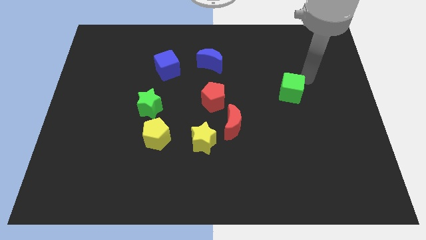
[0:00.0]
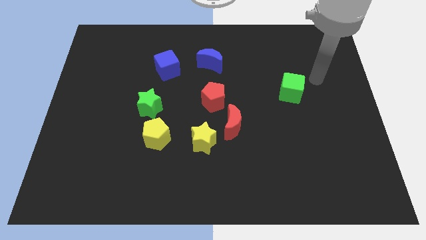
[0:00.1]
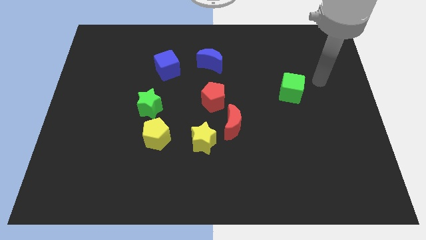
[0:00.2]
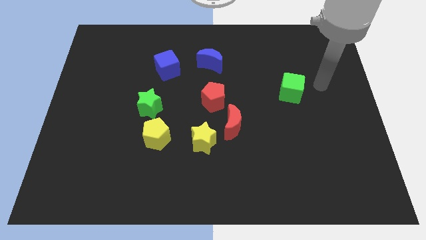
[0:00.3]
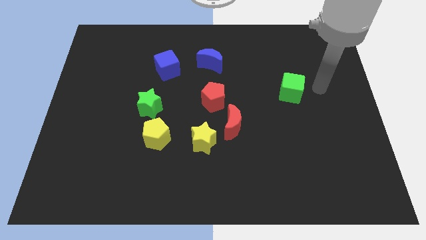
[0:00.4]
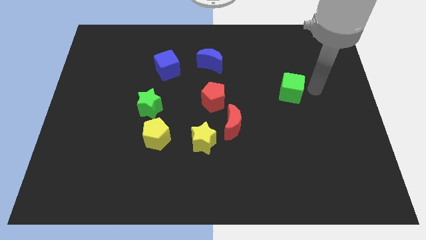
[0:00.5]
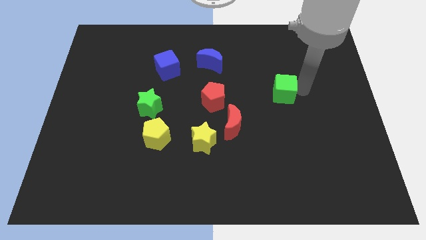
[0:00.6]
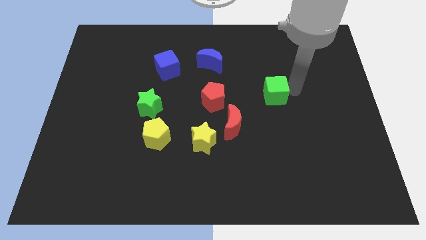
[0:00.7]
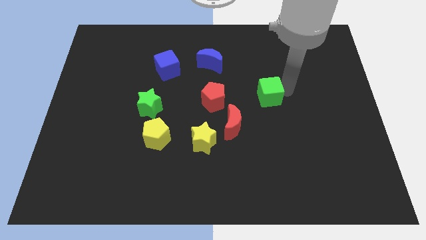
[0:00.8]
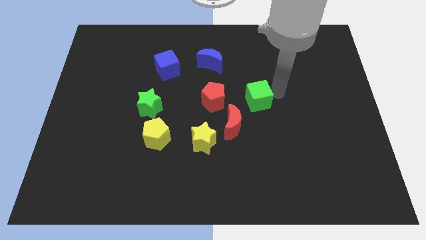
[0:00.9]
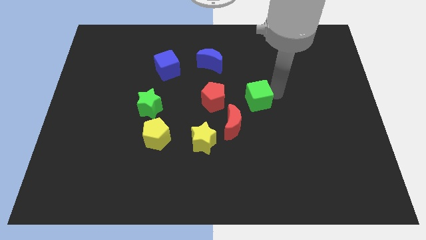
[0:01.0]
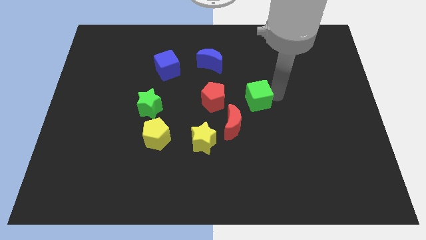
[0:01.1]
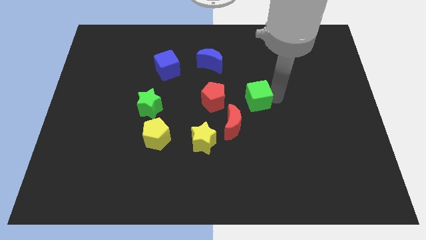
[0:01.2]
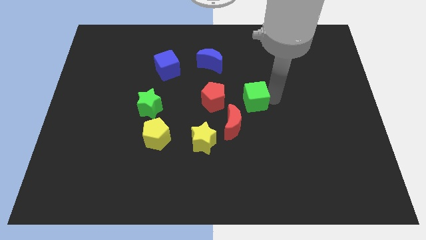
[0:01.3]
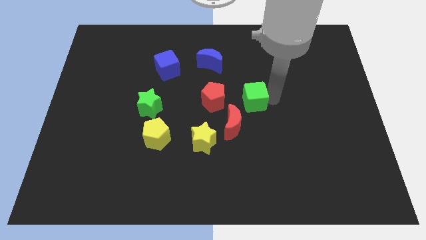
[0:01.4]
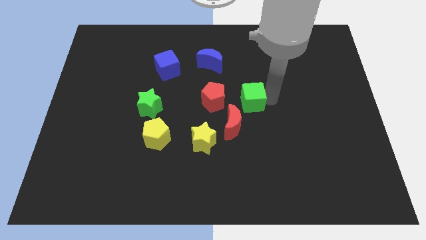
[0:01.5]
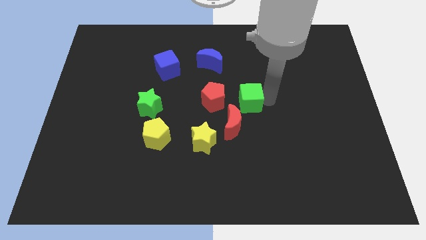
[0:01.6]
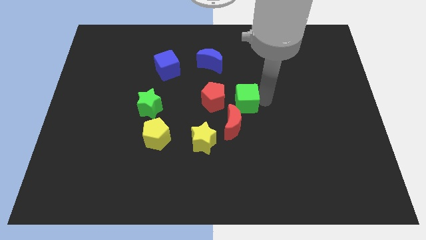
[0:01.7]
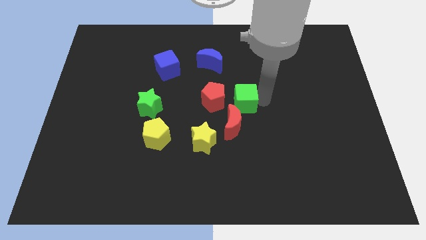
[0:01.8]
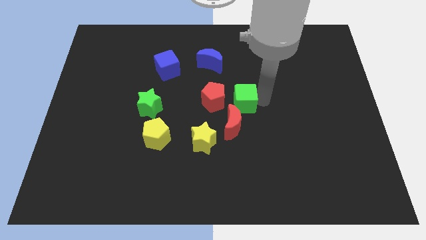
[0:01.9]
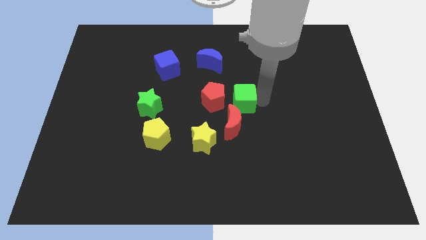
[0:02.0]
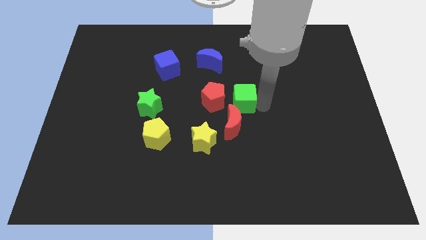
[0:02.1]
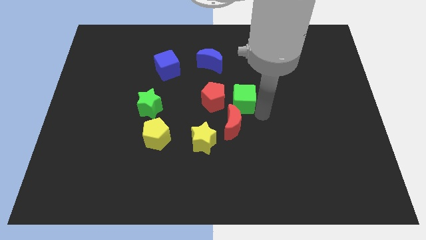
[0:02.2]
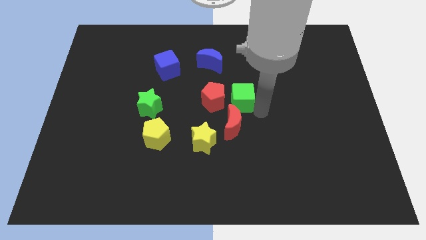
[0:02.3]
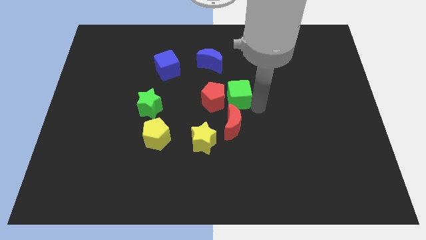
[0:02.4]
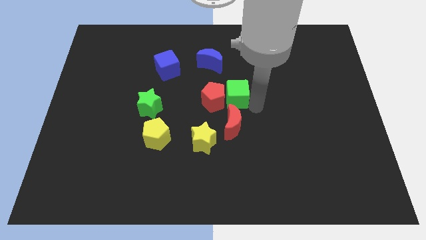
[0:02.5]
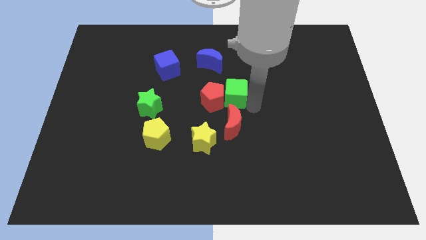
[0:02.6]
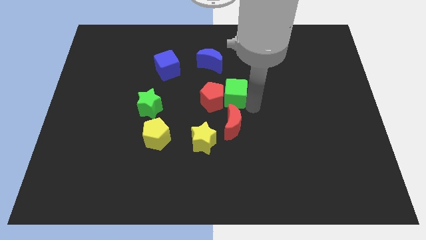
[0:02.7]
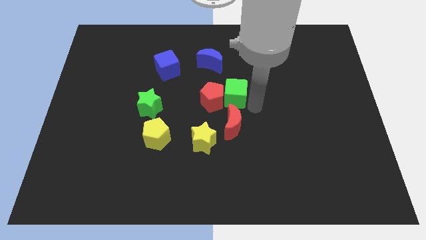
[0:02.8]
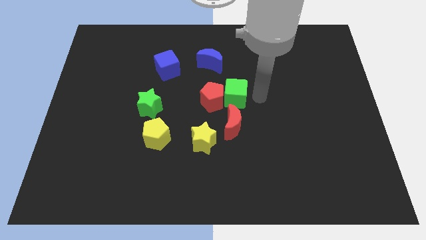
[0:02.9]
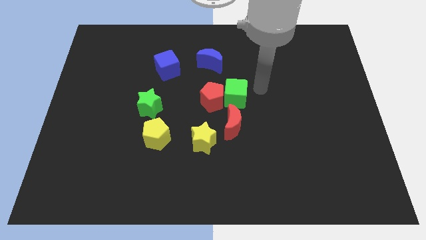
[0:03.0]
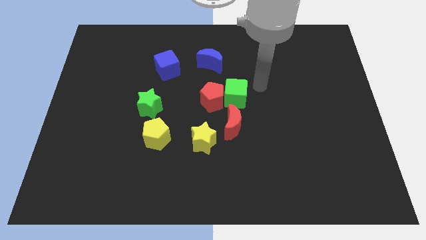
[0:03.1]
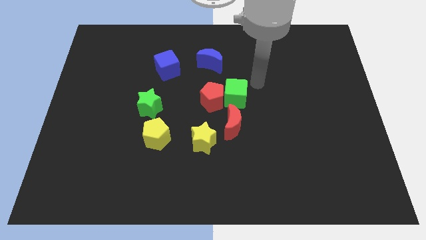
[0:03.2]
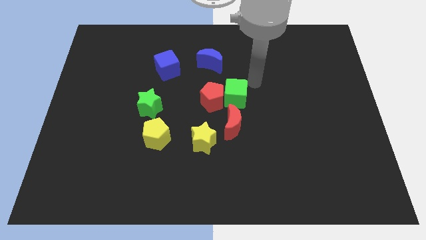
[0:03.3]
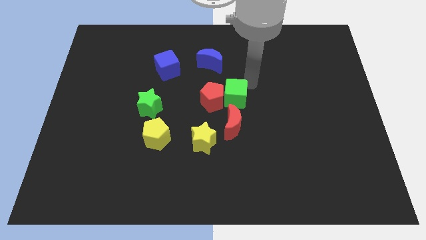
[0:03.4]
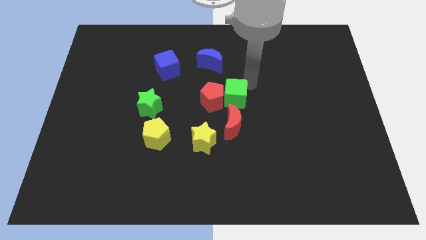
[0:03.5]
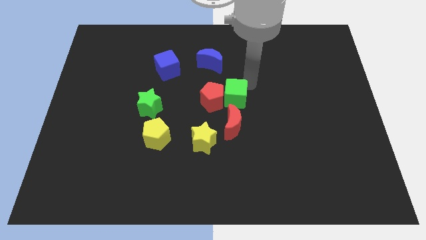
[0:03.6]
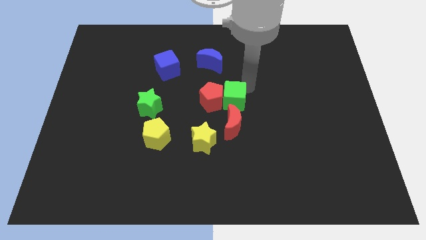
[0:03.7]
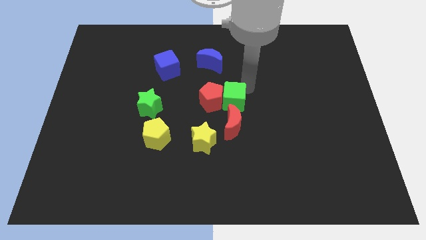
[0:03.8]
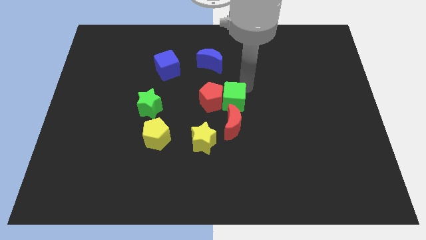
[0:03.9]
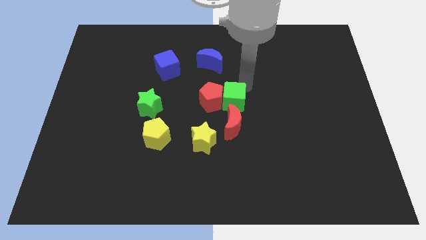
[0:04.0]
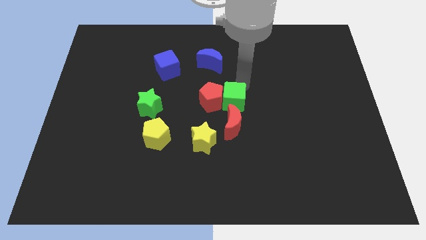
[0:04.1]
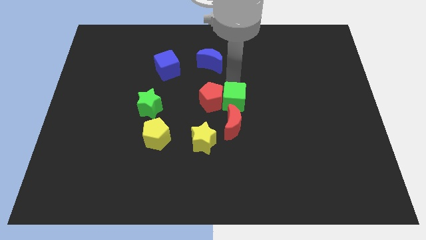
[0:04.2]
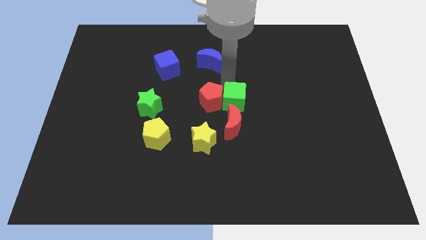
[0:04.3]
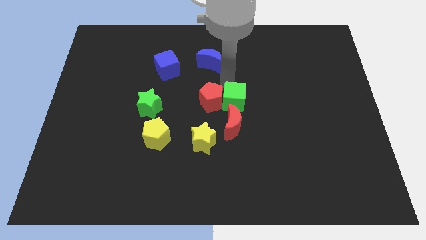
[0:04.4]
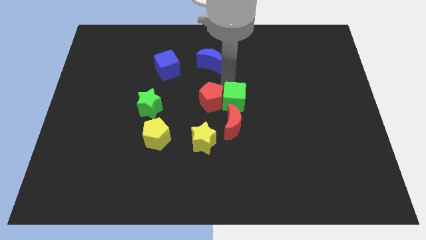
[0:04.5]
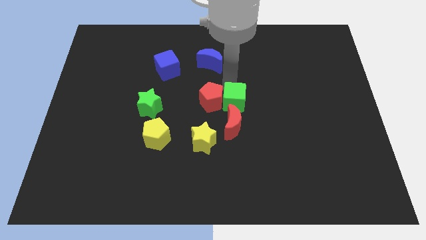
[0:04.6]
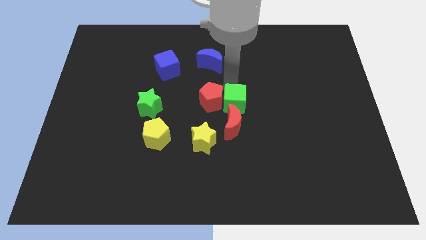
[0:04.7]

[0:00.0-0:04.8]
place green cube right to red pentagon

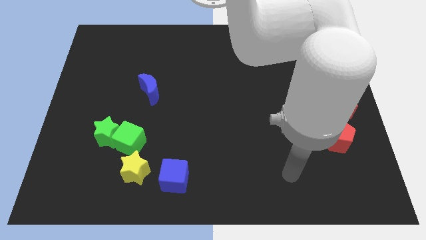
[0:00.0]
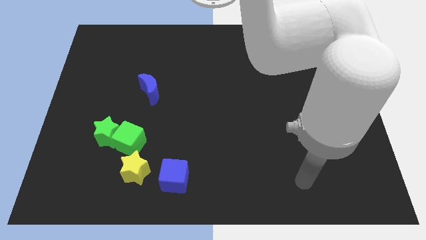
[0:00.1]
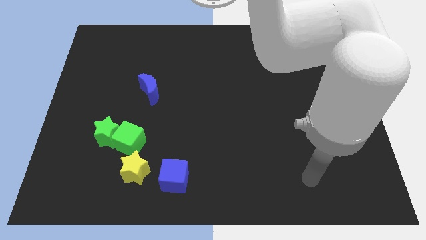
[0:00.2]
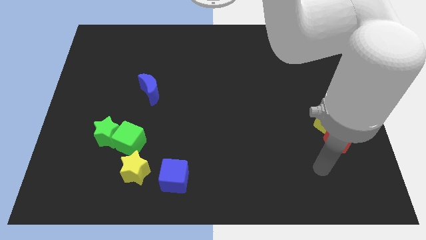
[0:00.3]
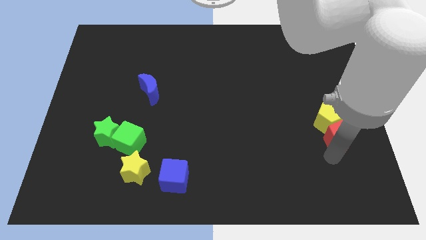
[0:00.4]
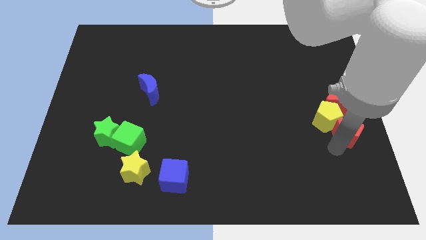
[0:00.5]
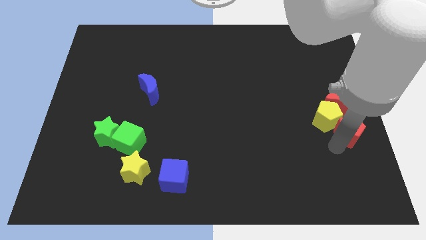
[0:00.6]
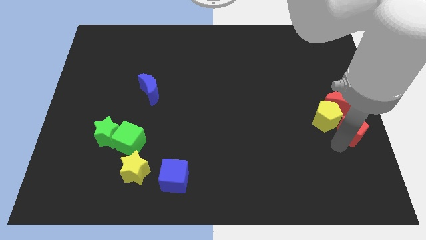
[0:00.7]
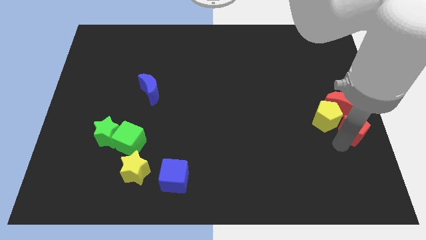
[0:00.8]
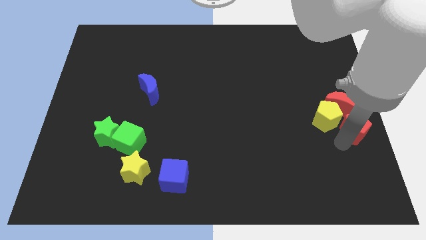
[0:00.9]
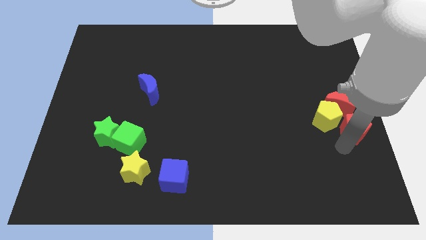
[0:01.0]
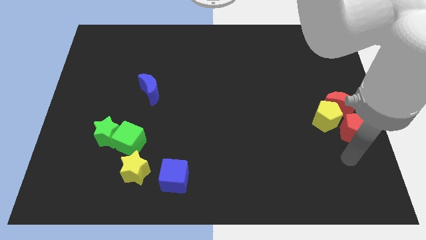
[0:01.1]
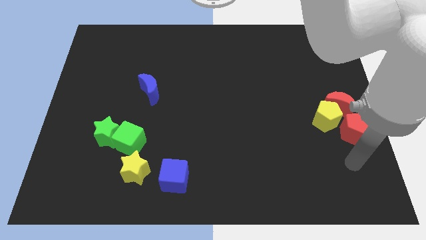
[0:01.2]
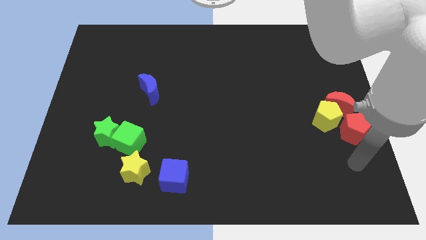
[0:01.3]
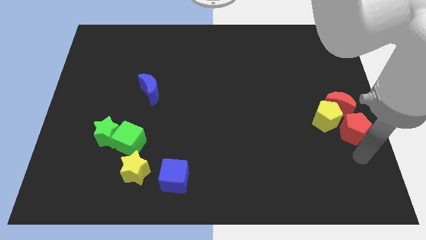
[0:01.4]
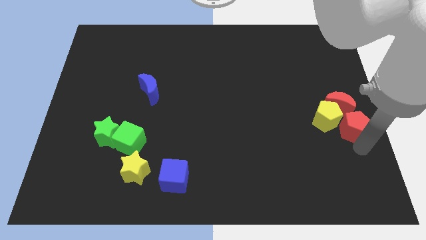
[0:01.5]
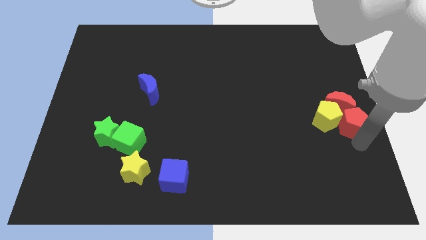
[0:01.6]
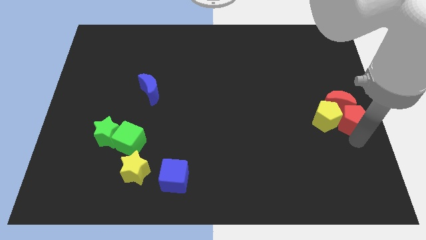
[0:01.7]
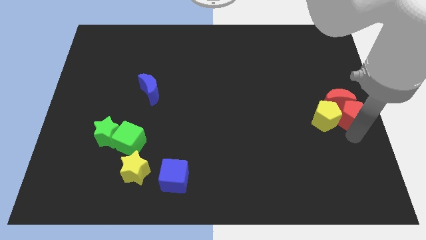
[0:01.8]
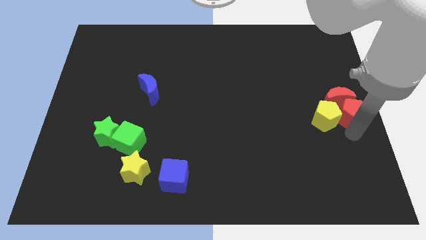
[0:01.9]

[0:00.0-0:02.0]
push the red pentagon to the right of the yellow pentagon

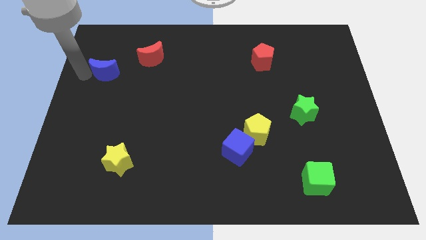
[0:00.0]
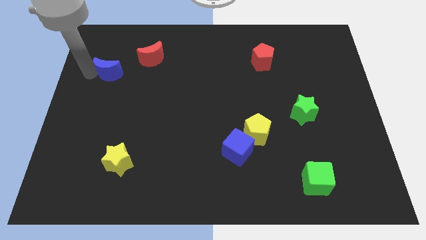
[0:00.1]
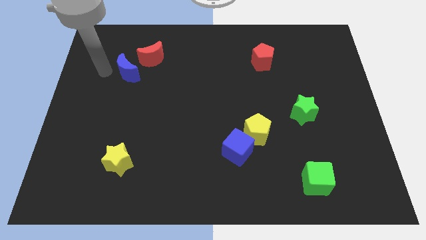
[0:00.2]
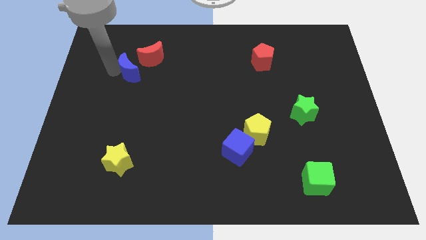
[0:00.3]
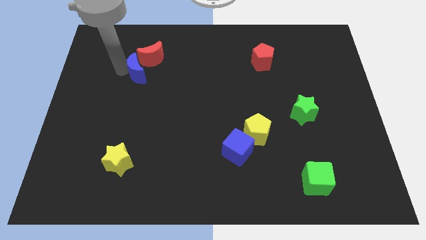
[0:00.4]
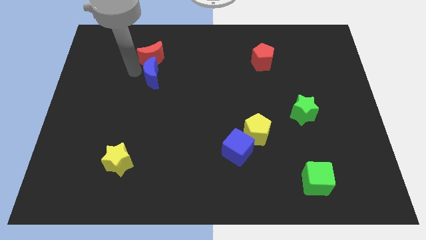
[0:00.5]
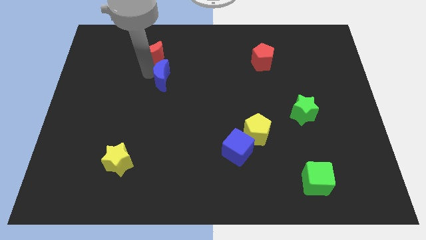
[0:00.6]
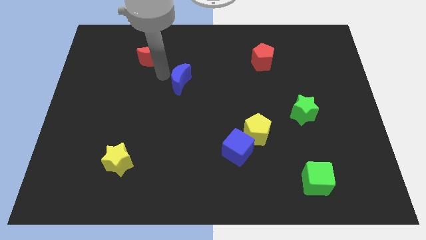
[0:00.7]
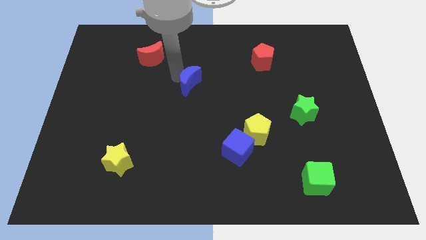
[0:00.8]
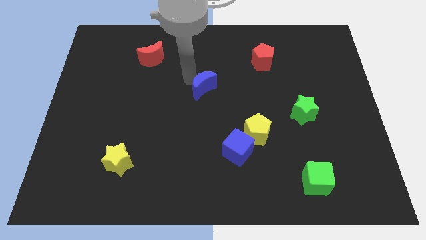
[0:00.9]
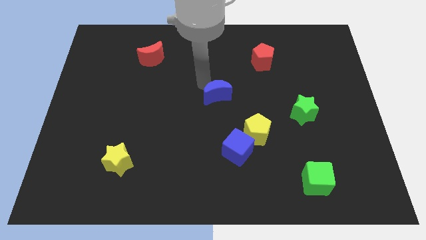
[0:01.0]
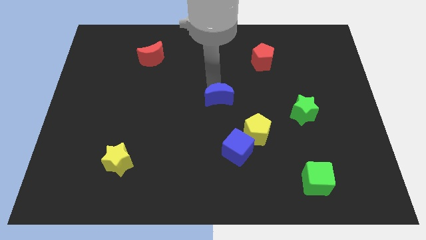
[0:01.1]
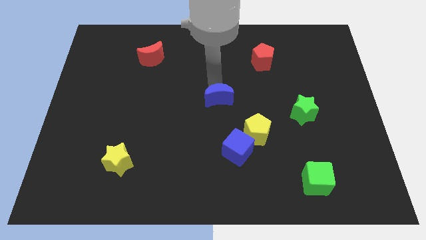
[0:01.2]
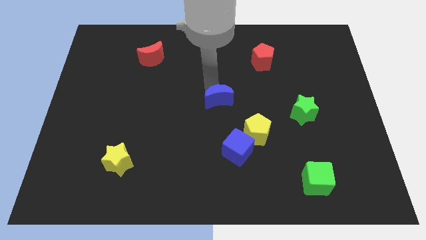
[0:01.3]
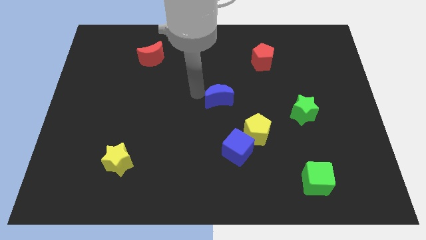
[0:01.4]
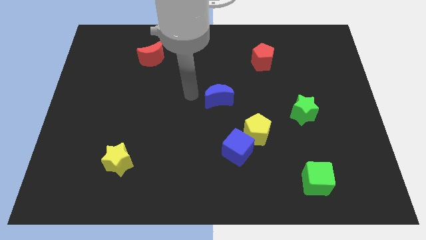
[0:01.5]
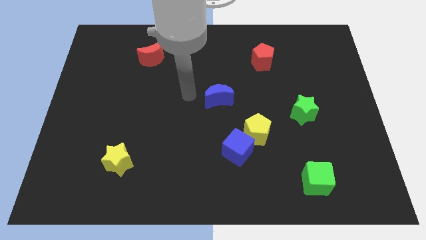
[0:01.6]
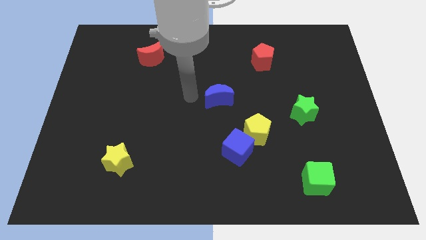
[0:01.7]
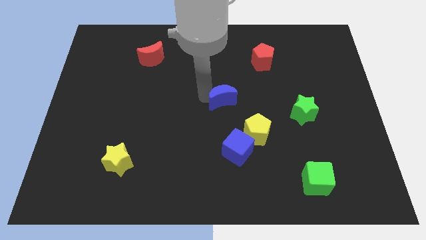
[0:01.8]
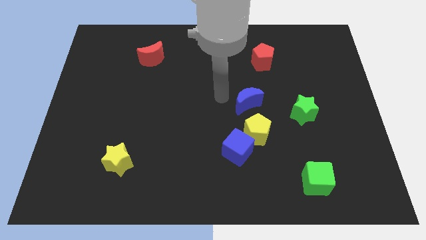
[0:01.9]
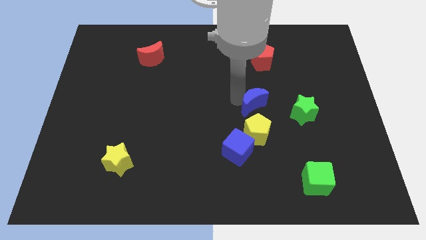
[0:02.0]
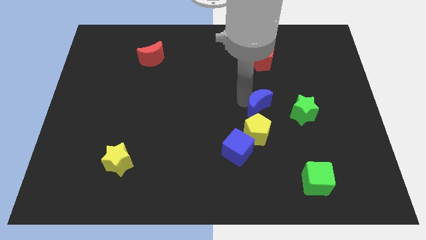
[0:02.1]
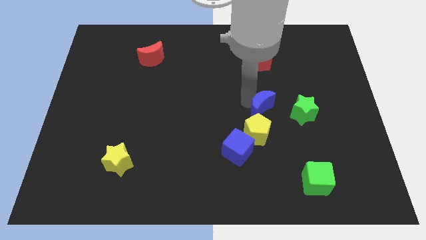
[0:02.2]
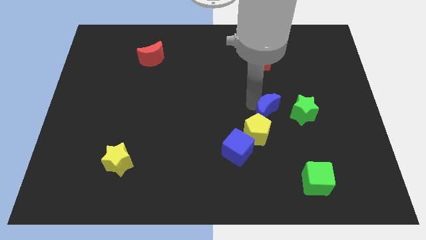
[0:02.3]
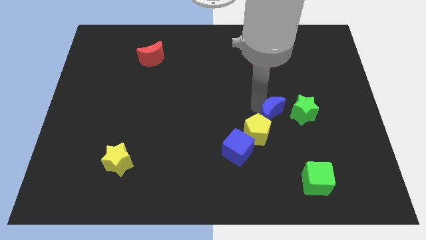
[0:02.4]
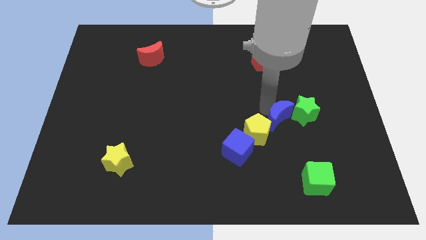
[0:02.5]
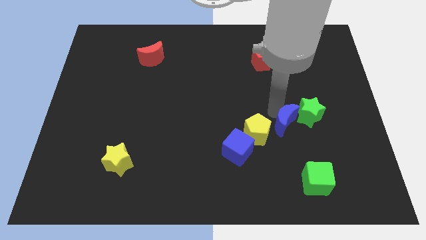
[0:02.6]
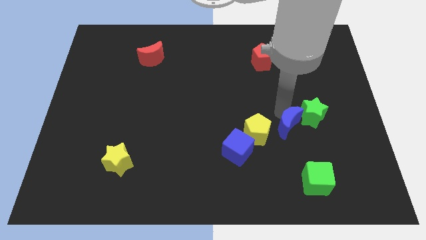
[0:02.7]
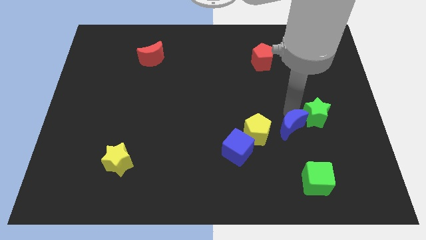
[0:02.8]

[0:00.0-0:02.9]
push blue crescent towards green star
